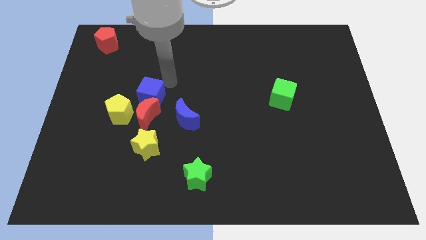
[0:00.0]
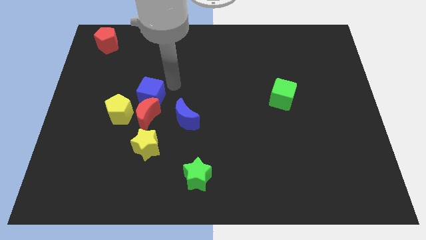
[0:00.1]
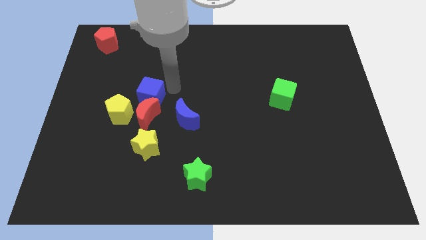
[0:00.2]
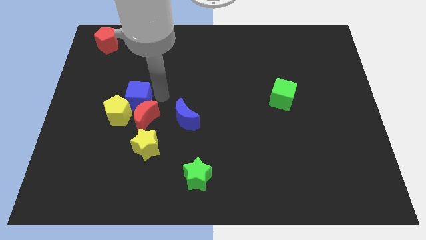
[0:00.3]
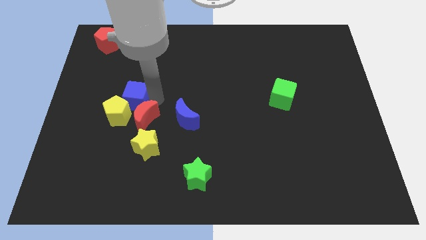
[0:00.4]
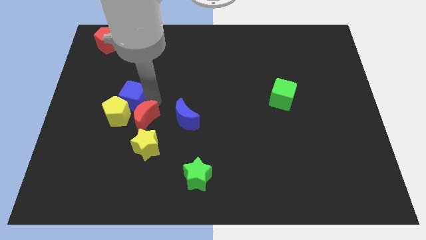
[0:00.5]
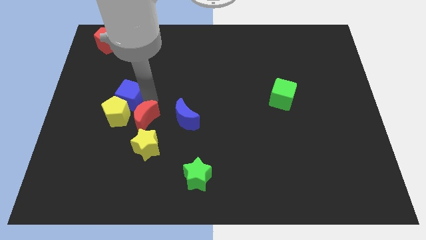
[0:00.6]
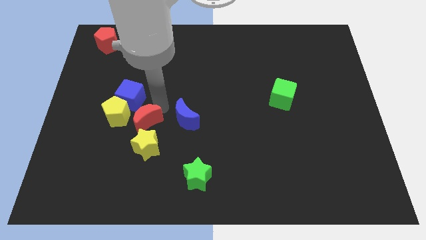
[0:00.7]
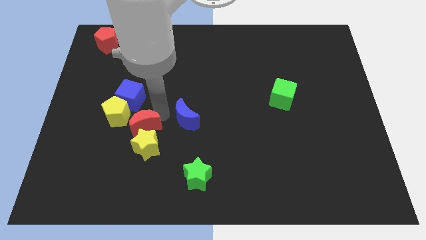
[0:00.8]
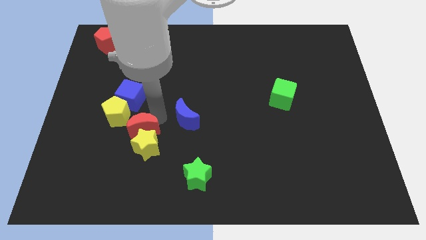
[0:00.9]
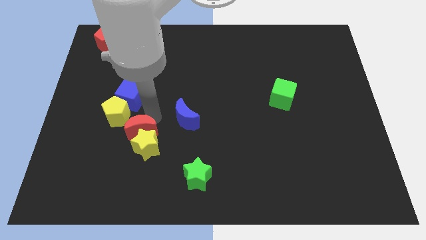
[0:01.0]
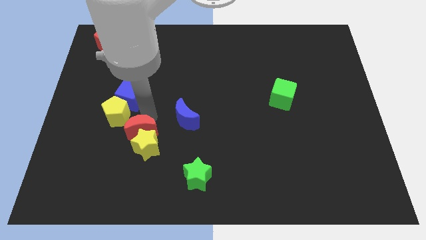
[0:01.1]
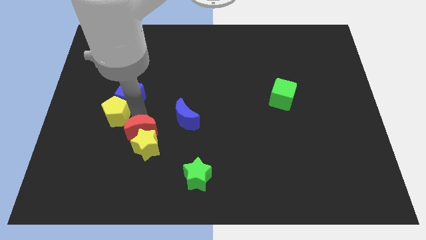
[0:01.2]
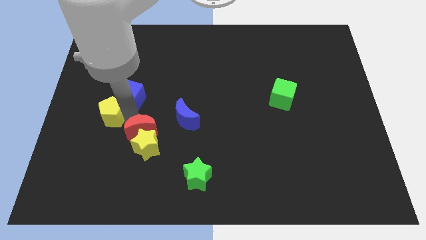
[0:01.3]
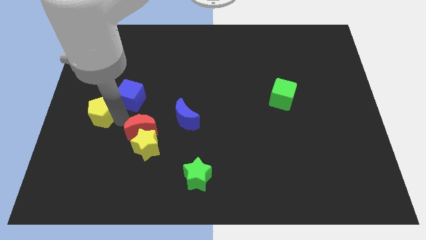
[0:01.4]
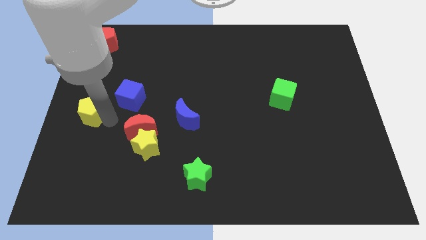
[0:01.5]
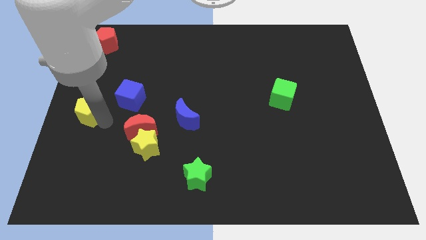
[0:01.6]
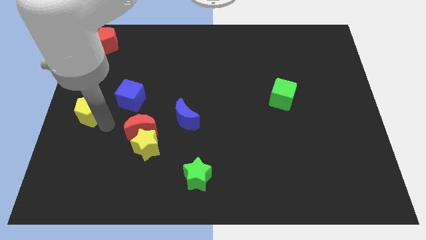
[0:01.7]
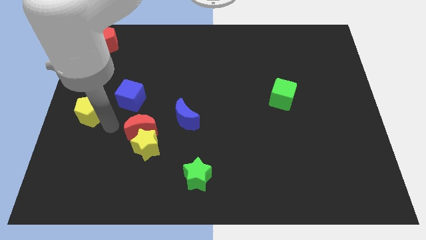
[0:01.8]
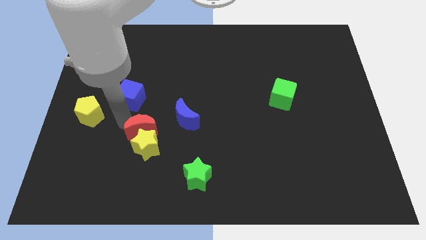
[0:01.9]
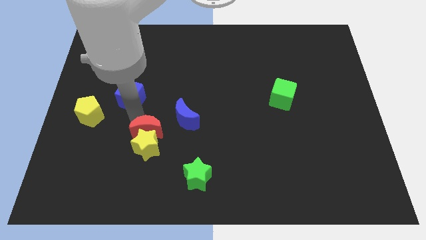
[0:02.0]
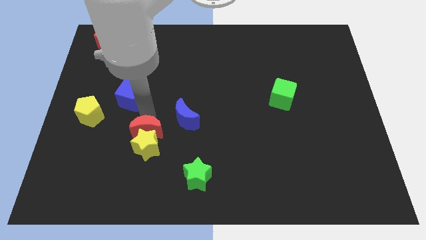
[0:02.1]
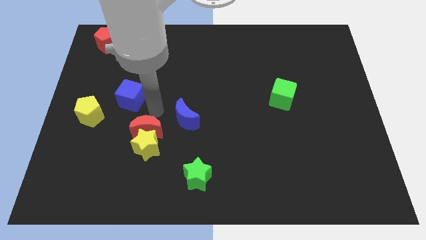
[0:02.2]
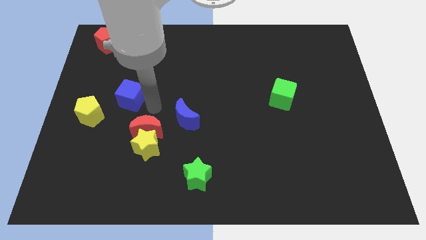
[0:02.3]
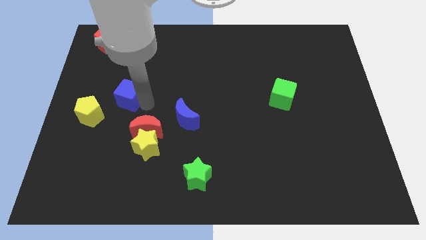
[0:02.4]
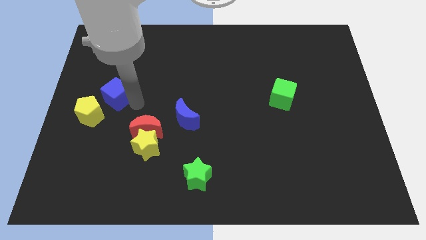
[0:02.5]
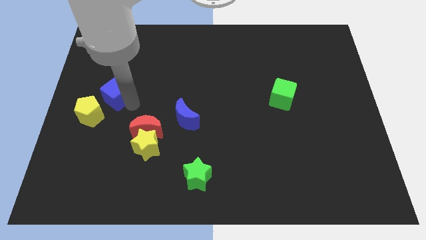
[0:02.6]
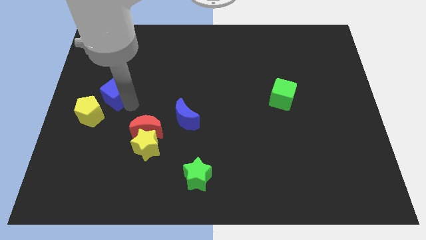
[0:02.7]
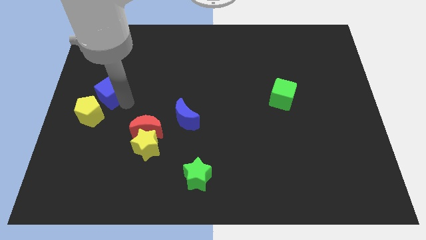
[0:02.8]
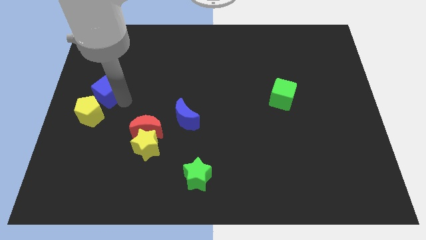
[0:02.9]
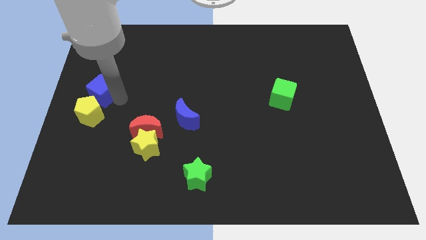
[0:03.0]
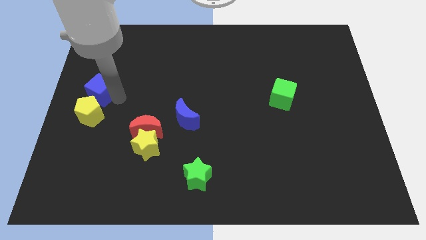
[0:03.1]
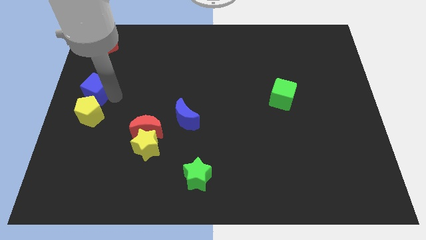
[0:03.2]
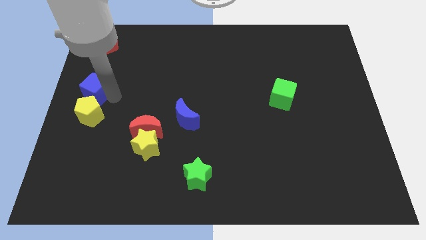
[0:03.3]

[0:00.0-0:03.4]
place the blue cube and yellow pentagon together at the center left of the board

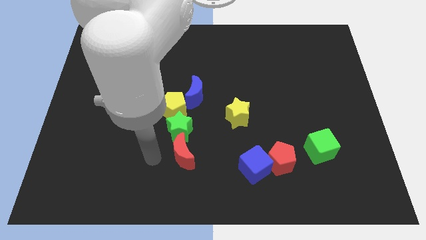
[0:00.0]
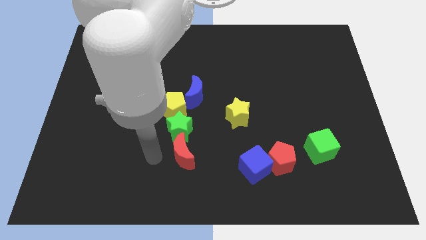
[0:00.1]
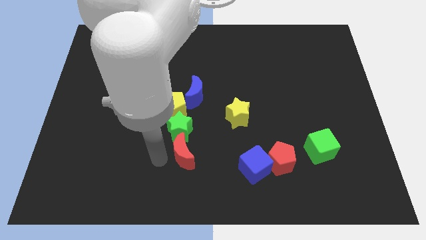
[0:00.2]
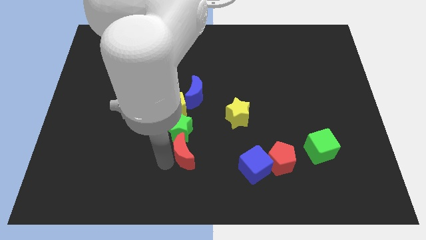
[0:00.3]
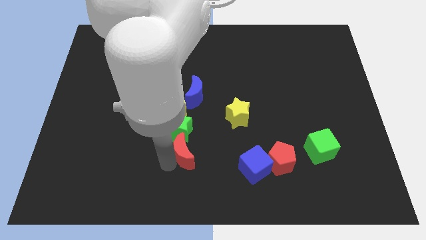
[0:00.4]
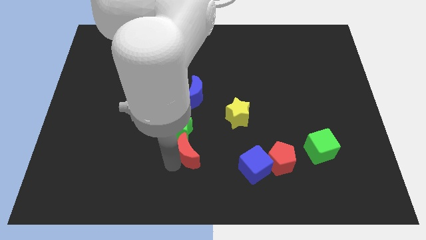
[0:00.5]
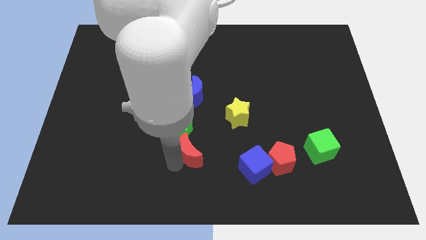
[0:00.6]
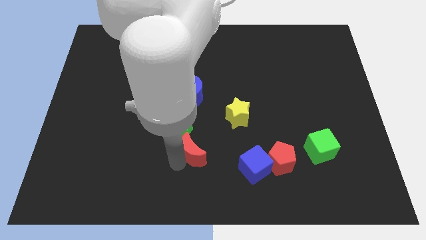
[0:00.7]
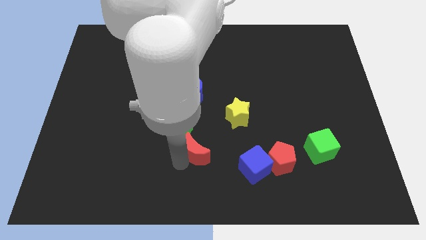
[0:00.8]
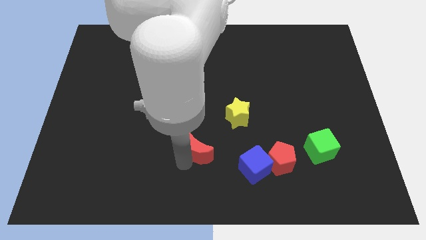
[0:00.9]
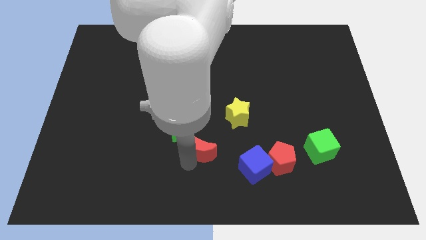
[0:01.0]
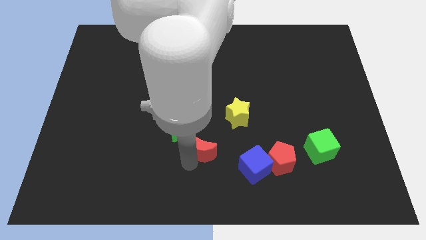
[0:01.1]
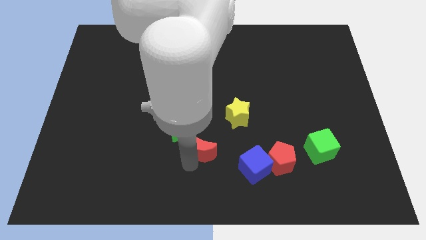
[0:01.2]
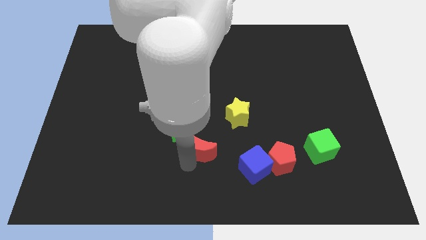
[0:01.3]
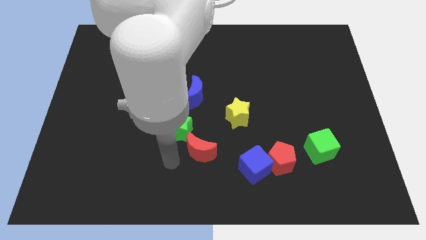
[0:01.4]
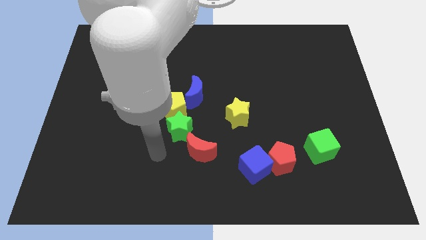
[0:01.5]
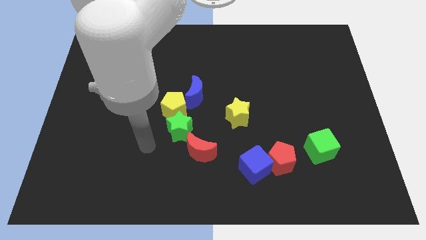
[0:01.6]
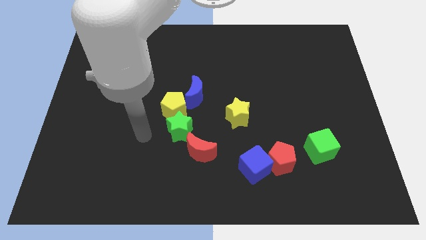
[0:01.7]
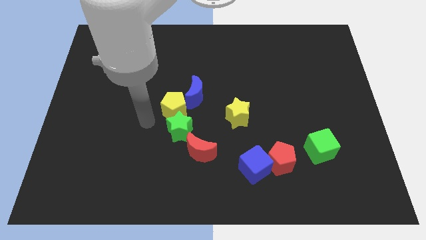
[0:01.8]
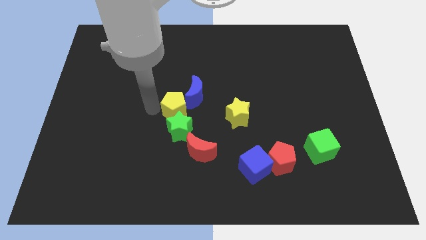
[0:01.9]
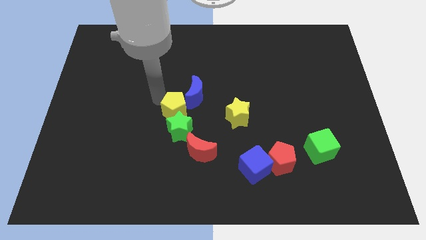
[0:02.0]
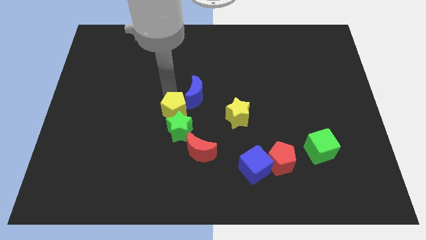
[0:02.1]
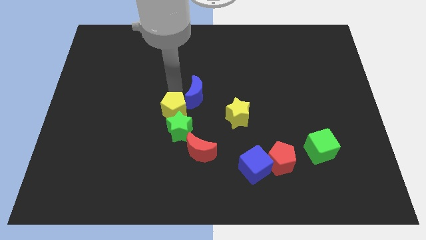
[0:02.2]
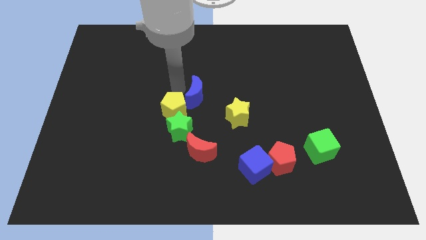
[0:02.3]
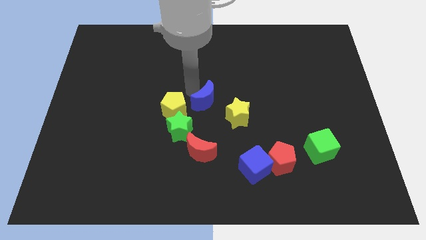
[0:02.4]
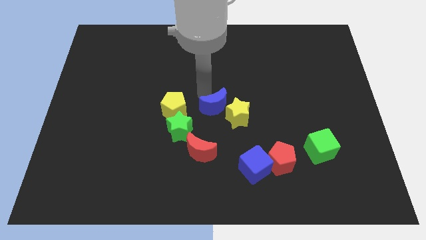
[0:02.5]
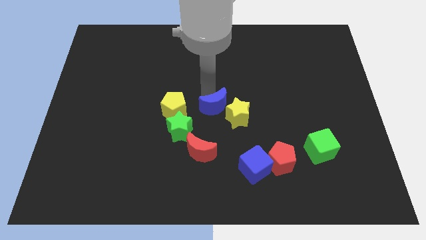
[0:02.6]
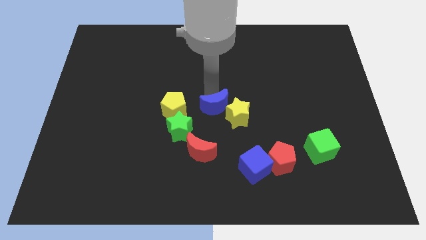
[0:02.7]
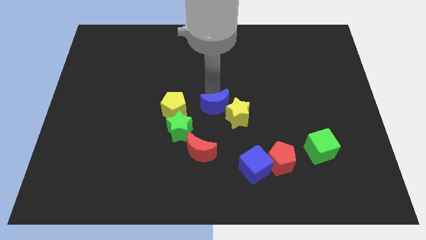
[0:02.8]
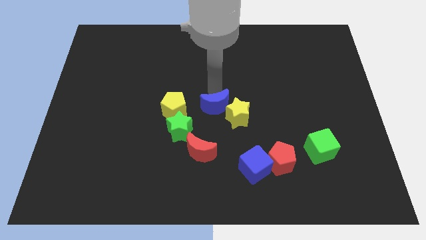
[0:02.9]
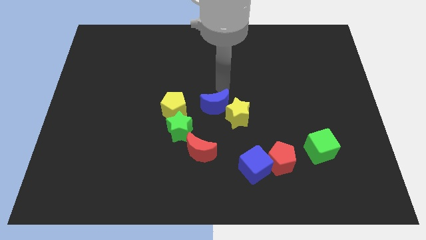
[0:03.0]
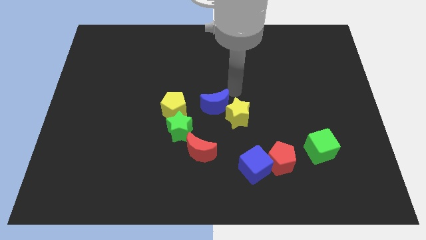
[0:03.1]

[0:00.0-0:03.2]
separate the yellow pentagon and blue moon

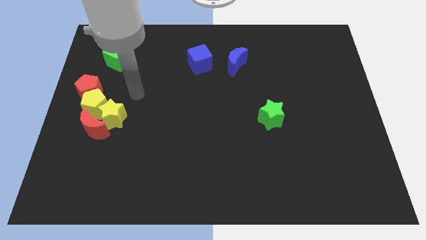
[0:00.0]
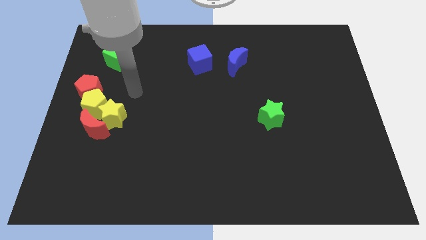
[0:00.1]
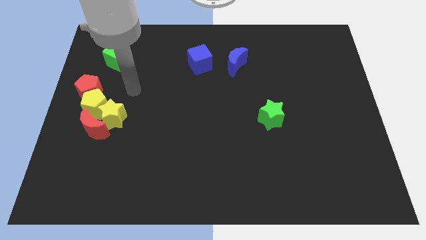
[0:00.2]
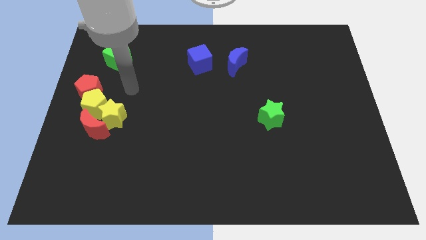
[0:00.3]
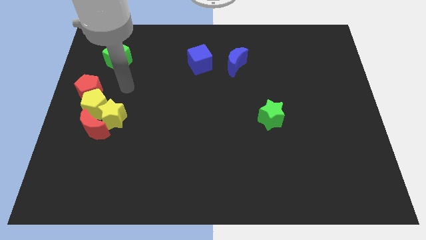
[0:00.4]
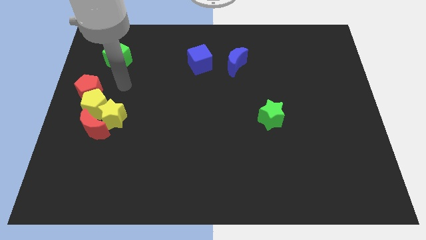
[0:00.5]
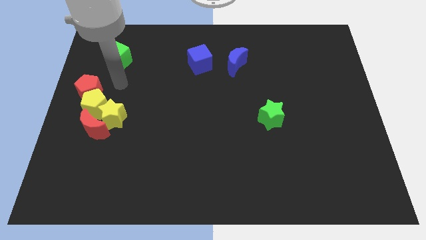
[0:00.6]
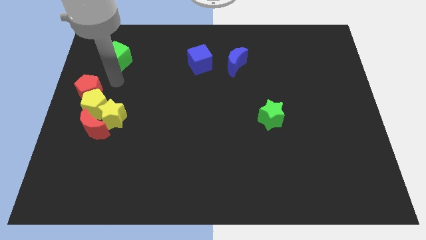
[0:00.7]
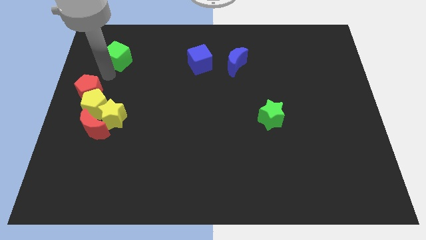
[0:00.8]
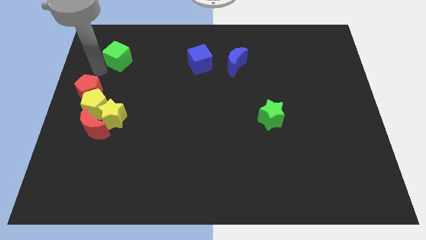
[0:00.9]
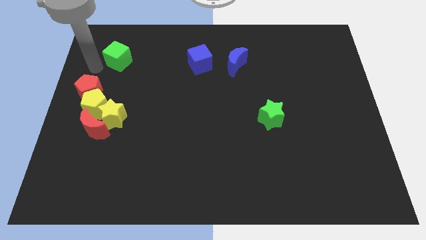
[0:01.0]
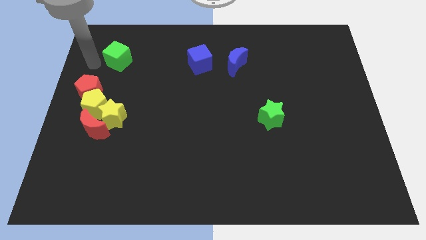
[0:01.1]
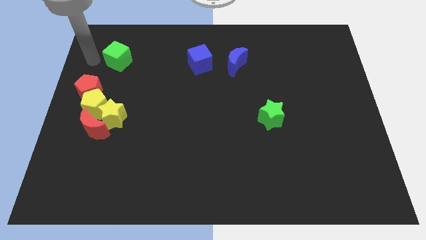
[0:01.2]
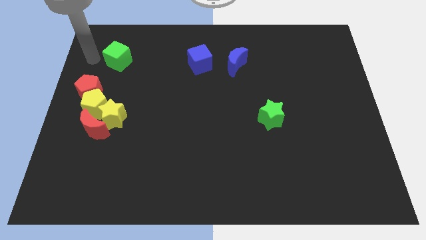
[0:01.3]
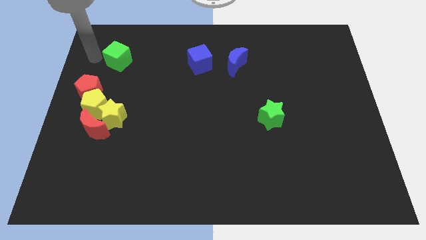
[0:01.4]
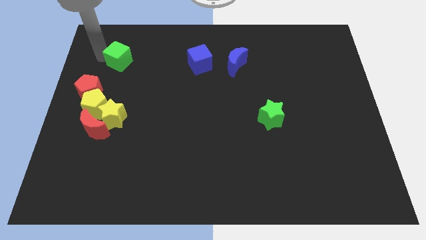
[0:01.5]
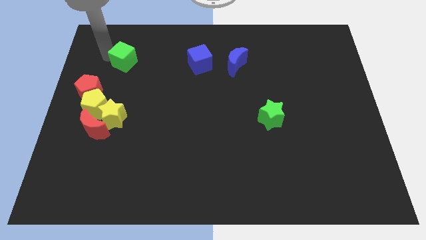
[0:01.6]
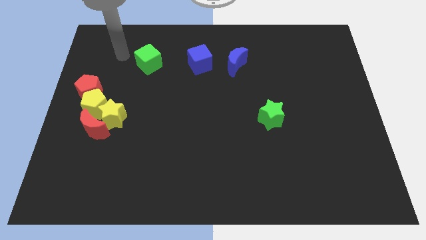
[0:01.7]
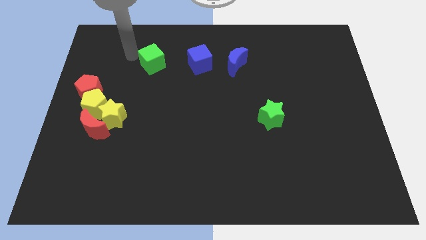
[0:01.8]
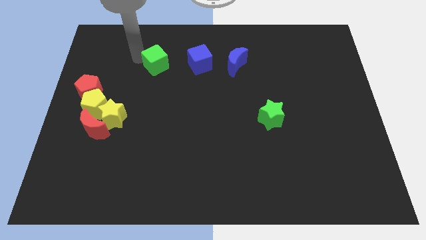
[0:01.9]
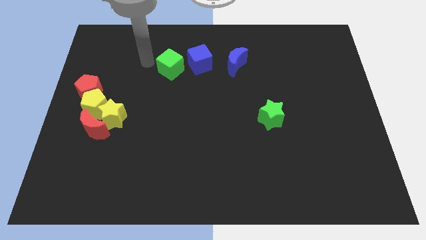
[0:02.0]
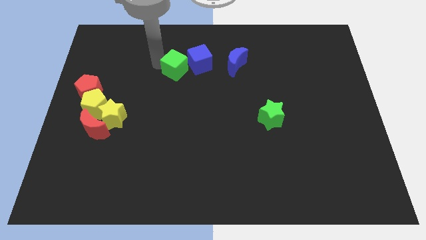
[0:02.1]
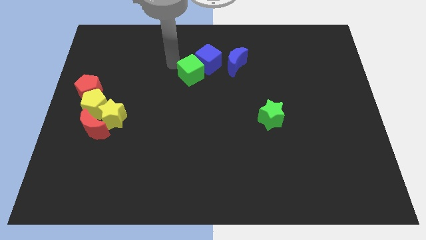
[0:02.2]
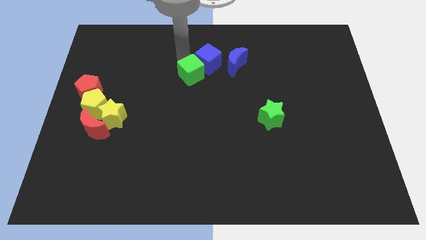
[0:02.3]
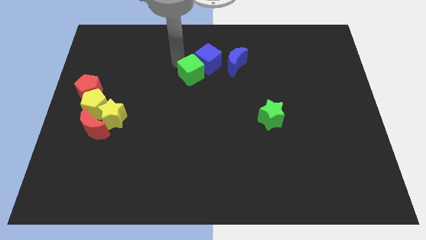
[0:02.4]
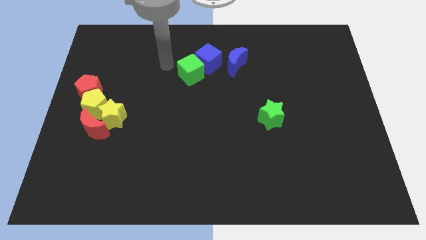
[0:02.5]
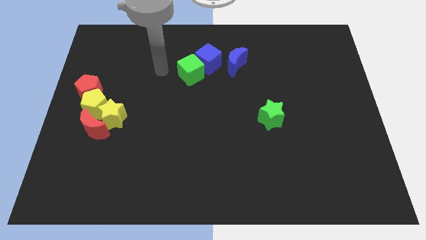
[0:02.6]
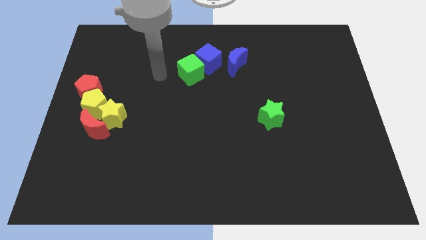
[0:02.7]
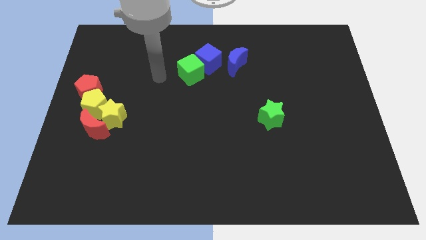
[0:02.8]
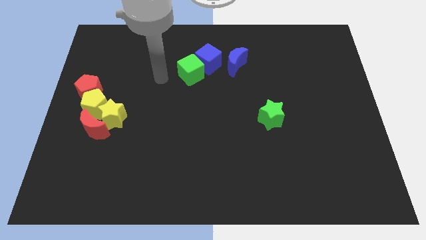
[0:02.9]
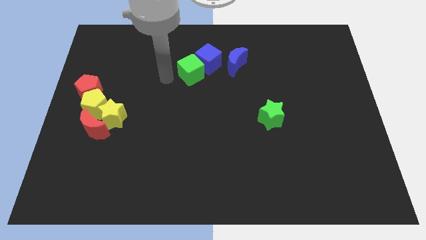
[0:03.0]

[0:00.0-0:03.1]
drag the green cube and place it next to the blue cube
